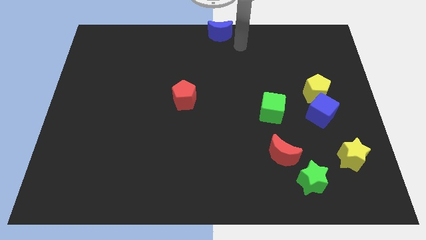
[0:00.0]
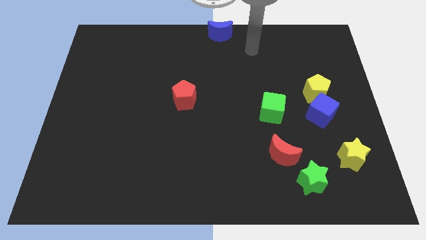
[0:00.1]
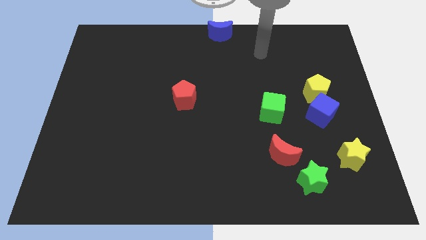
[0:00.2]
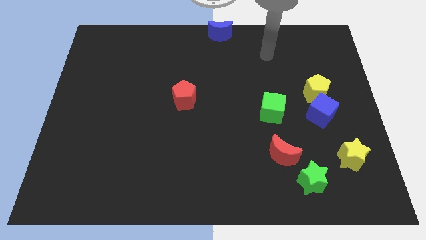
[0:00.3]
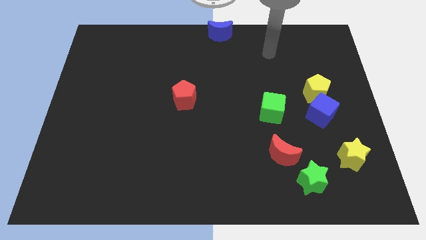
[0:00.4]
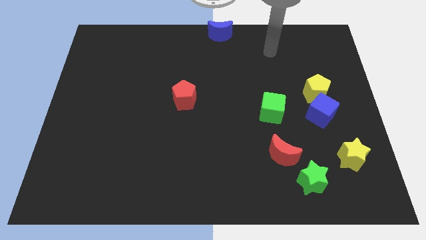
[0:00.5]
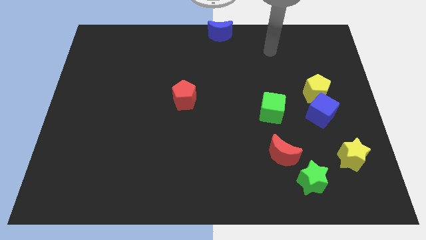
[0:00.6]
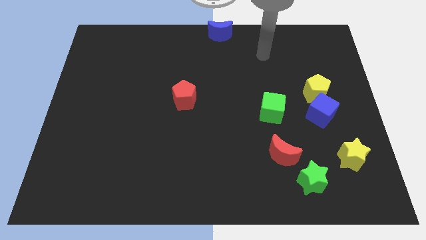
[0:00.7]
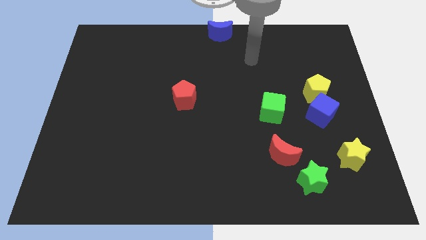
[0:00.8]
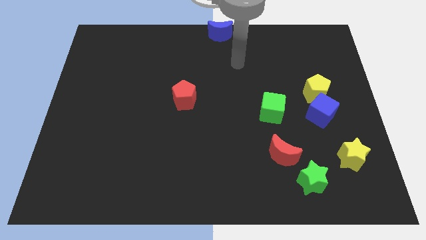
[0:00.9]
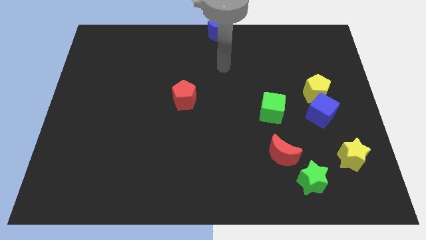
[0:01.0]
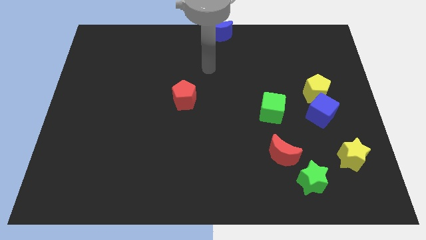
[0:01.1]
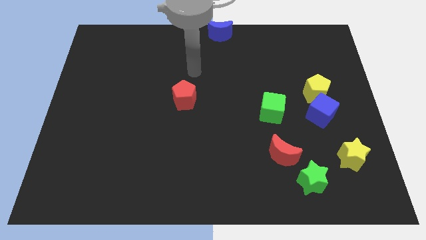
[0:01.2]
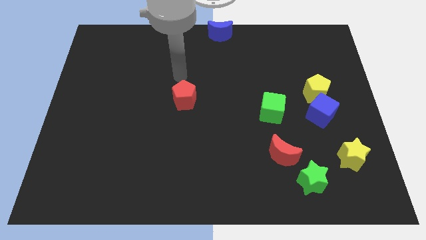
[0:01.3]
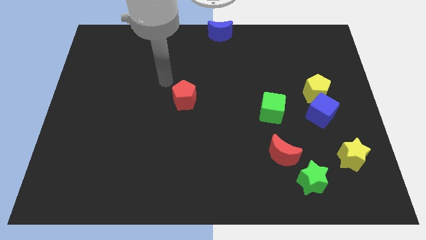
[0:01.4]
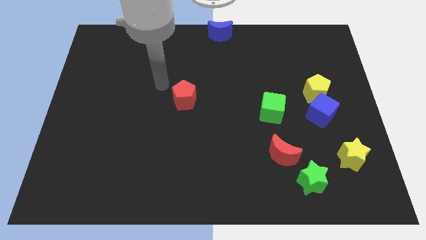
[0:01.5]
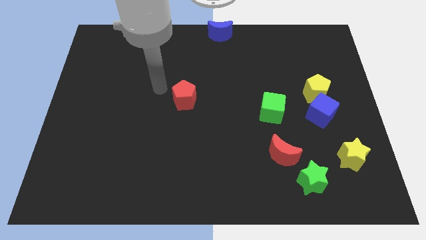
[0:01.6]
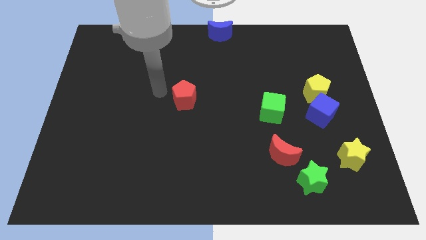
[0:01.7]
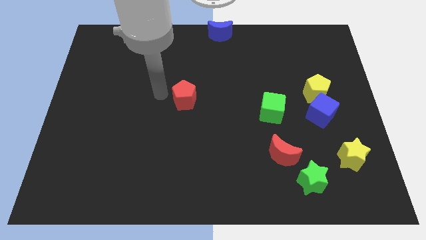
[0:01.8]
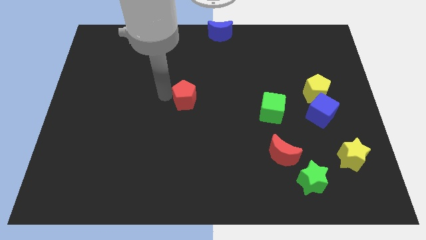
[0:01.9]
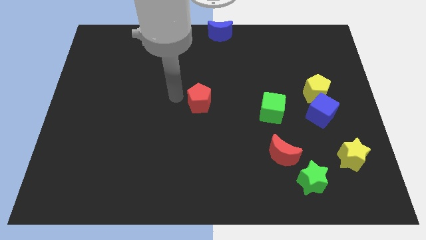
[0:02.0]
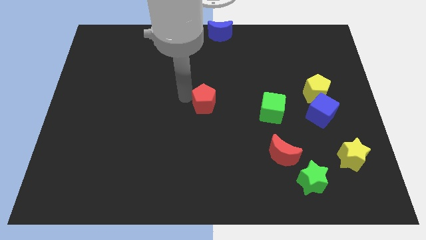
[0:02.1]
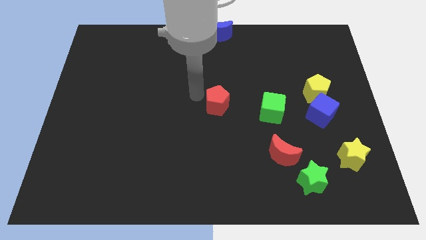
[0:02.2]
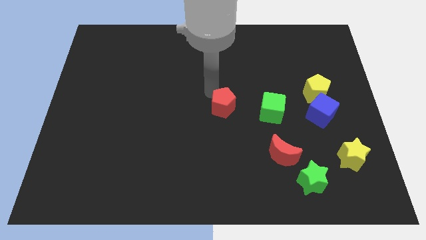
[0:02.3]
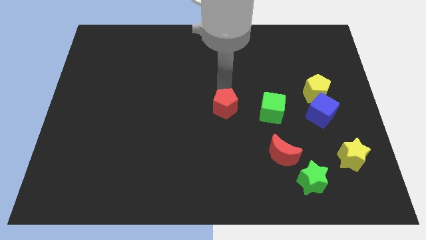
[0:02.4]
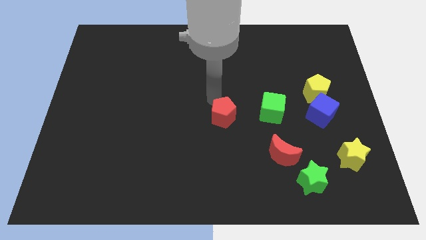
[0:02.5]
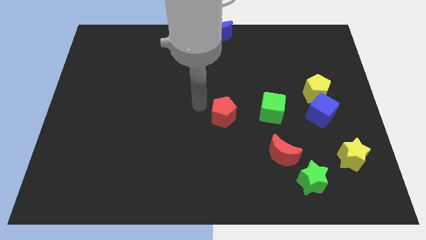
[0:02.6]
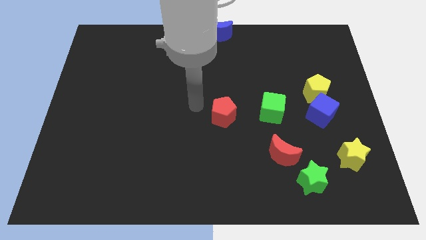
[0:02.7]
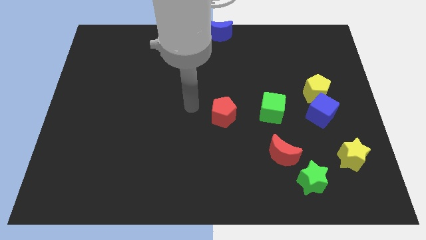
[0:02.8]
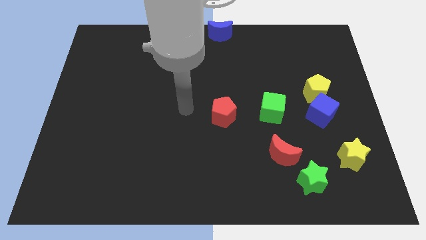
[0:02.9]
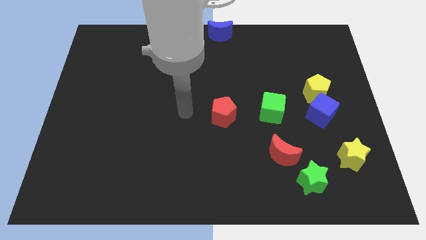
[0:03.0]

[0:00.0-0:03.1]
move red pentagon parallel to green cube

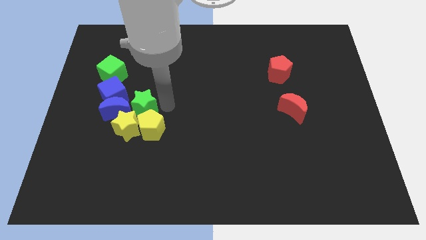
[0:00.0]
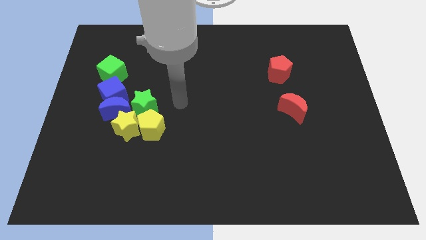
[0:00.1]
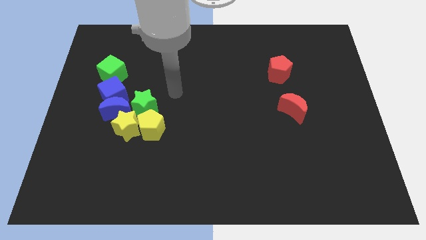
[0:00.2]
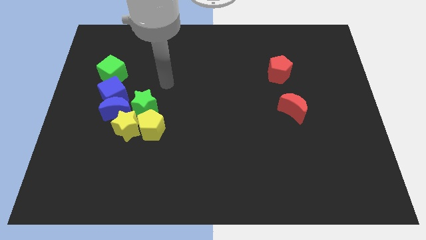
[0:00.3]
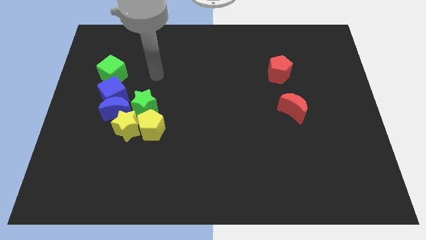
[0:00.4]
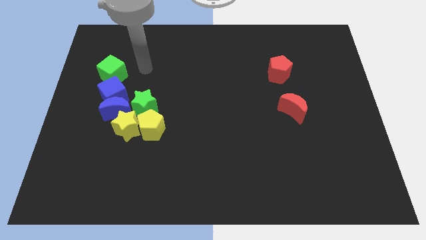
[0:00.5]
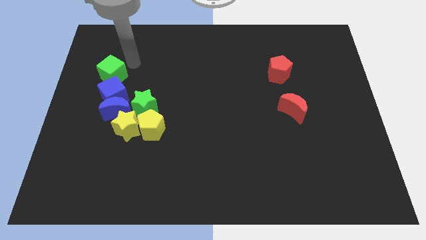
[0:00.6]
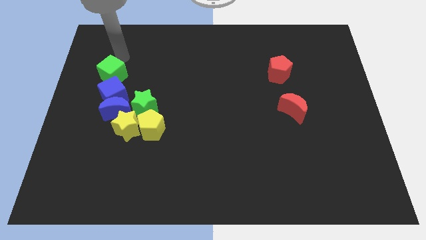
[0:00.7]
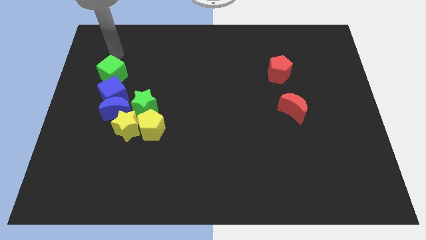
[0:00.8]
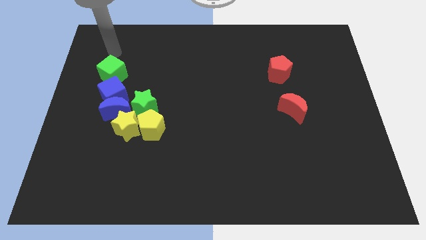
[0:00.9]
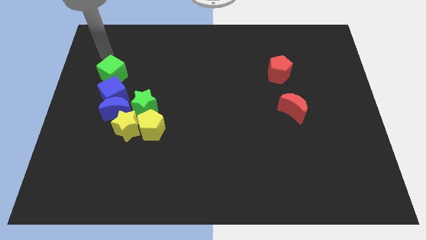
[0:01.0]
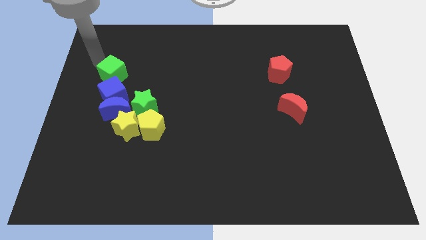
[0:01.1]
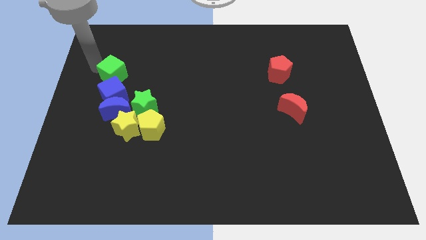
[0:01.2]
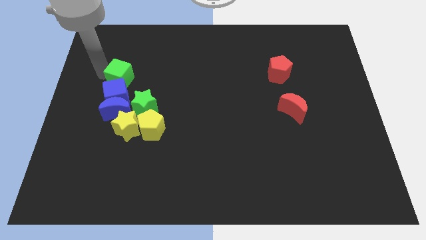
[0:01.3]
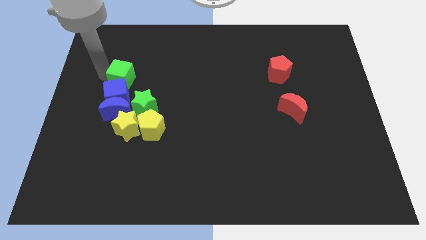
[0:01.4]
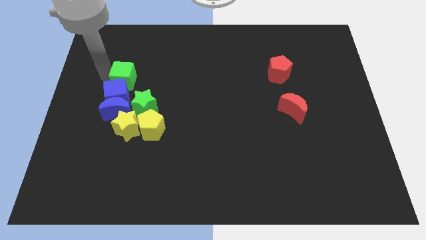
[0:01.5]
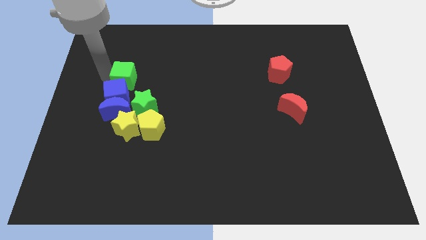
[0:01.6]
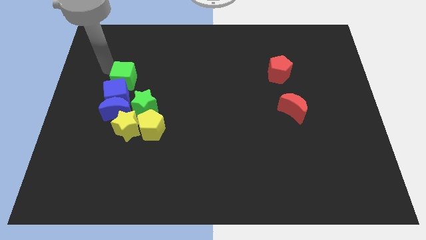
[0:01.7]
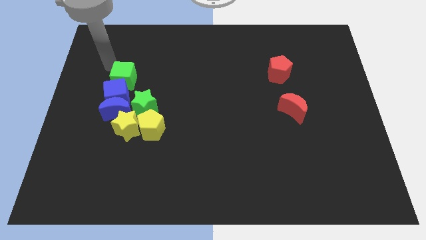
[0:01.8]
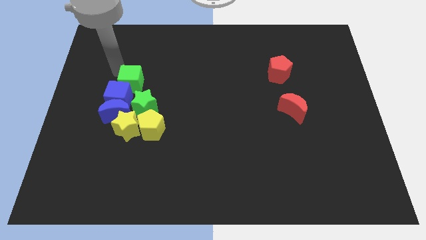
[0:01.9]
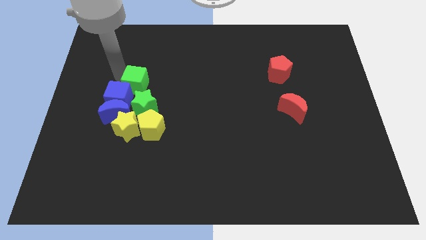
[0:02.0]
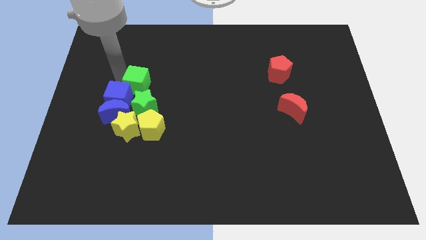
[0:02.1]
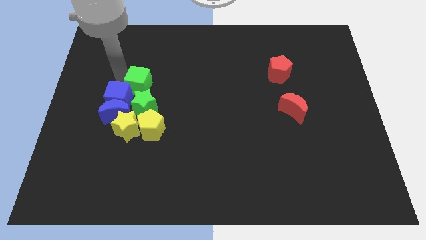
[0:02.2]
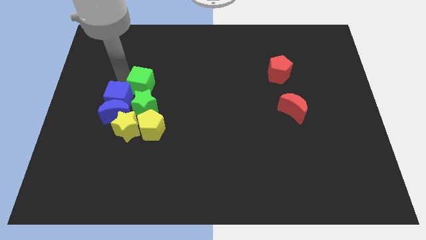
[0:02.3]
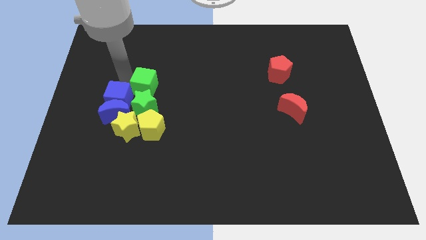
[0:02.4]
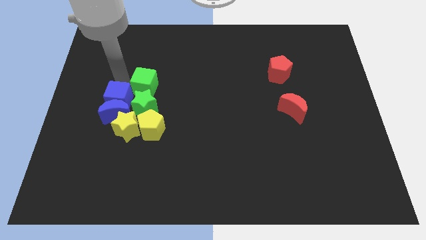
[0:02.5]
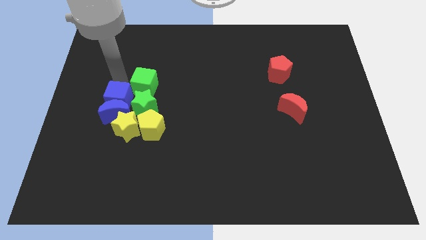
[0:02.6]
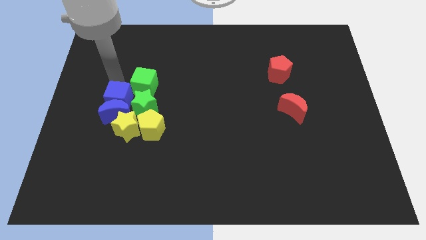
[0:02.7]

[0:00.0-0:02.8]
place the green cube above the green star

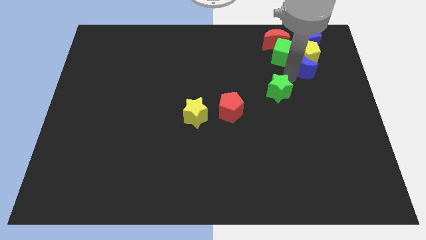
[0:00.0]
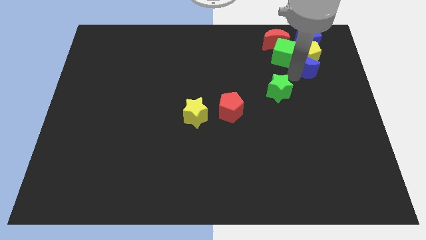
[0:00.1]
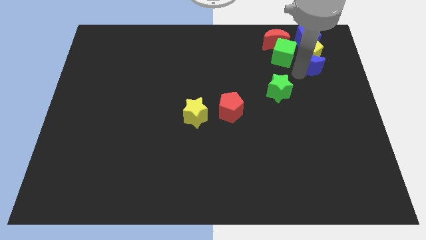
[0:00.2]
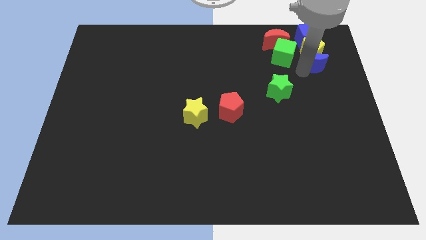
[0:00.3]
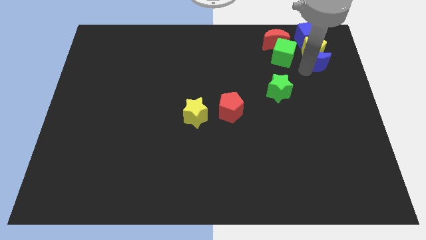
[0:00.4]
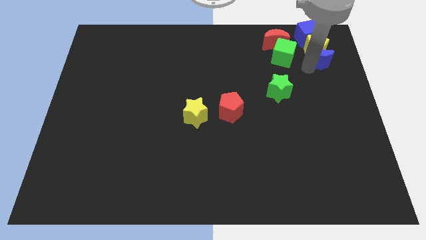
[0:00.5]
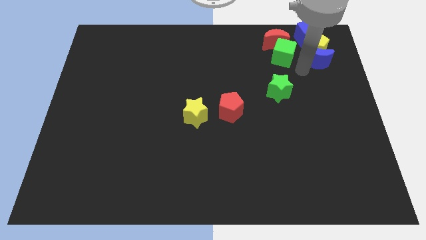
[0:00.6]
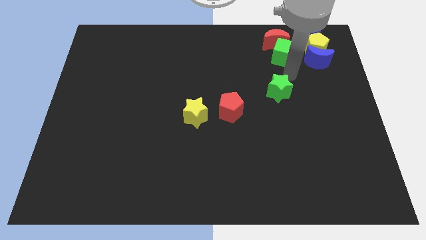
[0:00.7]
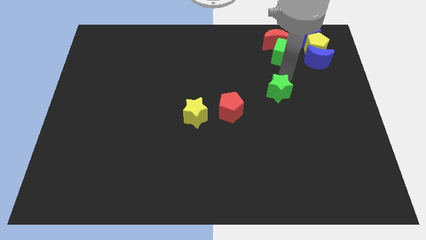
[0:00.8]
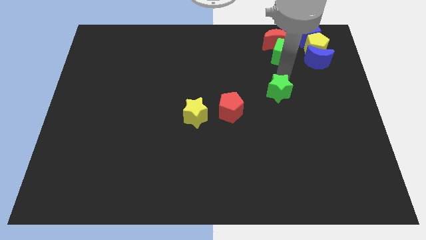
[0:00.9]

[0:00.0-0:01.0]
push the blue blocks and yellow pentagon to the top side of the board

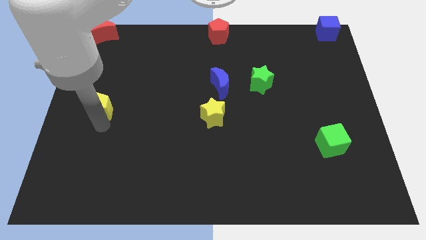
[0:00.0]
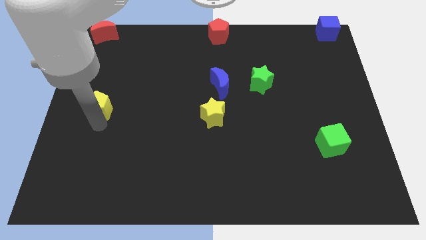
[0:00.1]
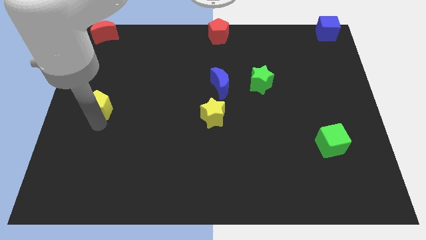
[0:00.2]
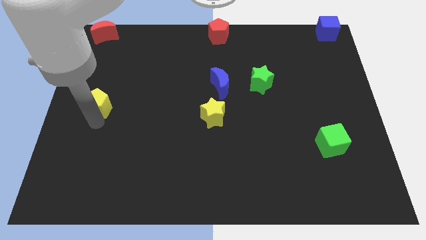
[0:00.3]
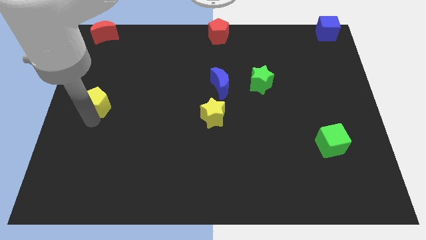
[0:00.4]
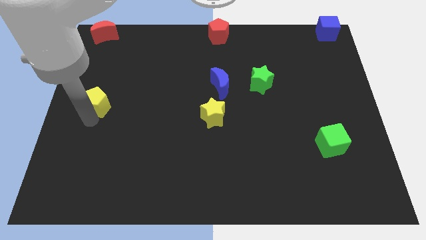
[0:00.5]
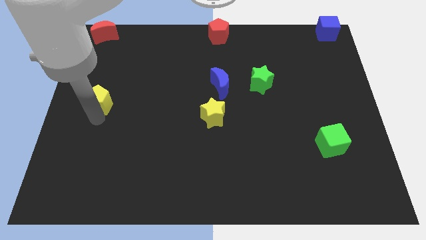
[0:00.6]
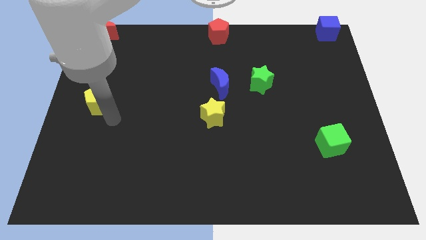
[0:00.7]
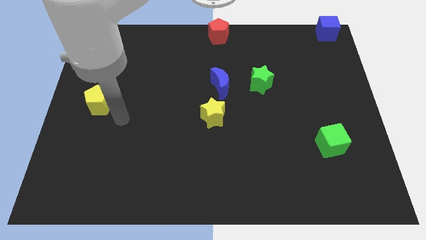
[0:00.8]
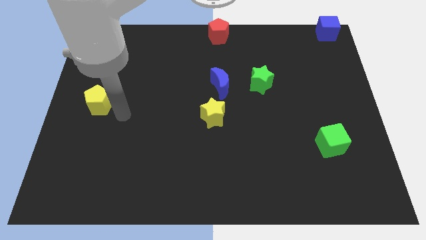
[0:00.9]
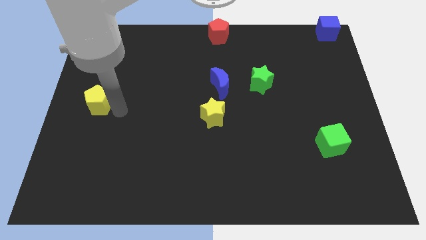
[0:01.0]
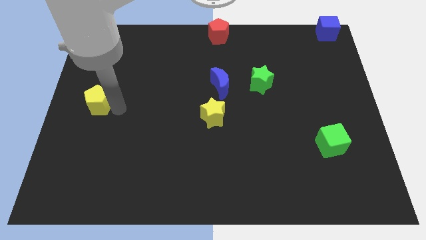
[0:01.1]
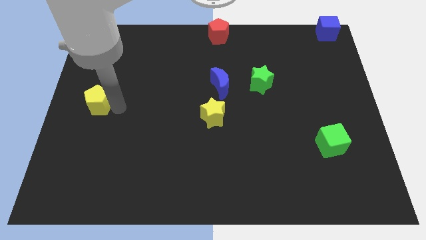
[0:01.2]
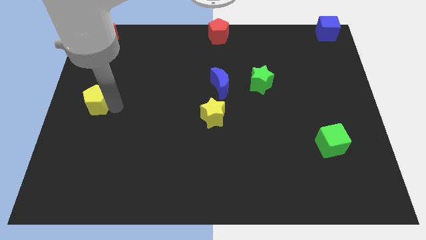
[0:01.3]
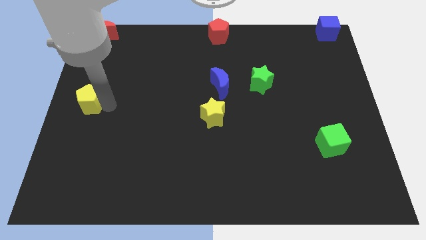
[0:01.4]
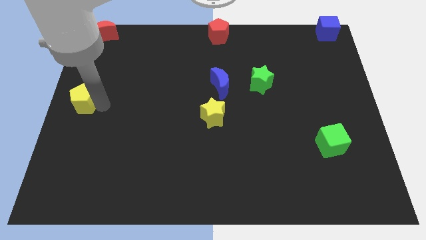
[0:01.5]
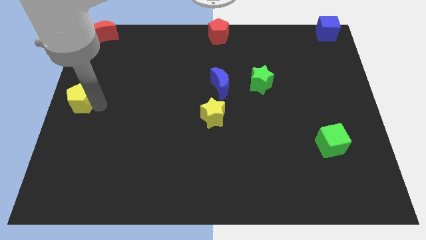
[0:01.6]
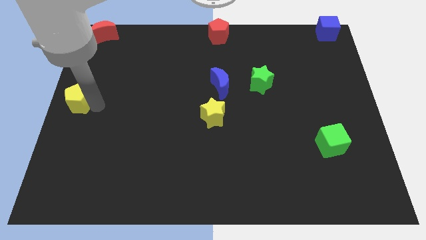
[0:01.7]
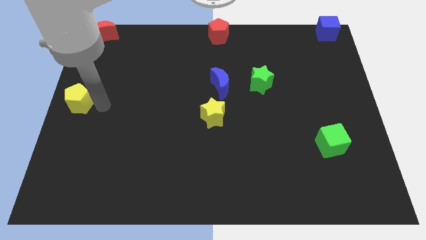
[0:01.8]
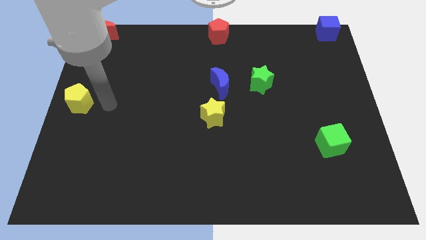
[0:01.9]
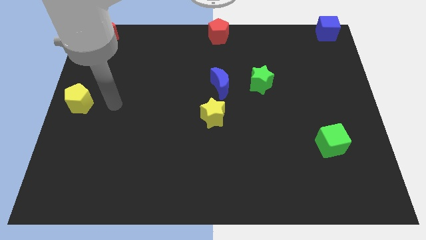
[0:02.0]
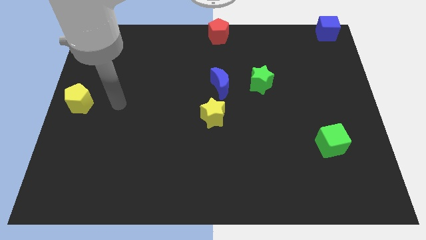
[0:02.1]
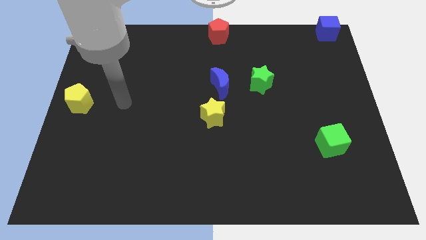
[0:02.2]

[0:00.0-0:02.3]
push the yellow pentagon towards the left side of the board
